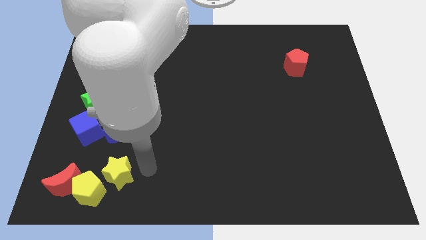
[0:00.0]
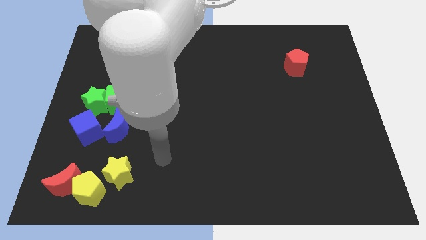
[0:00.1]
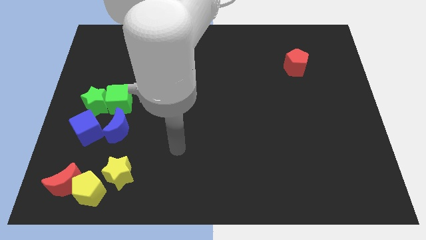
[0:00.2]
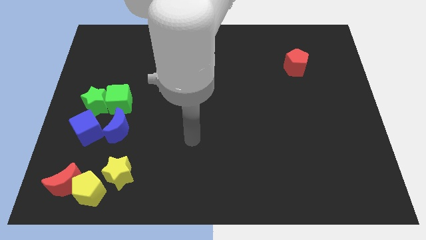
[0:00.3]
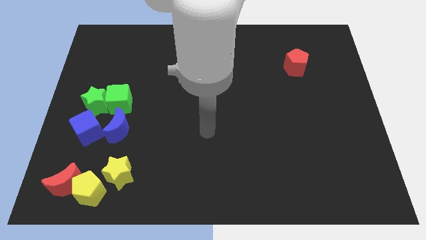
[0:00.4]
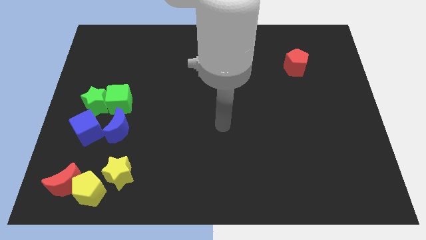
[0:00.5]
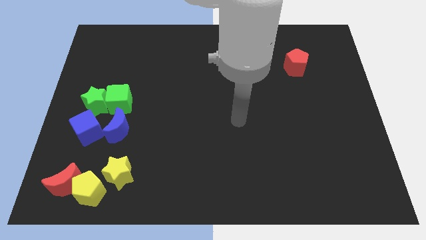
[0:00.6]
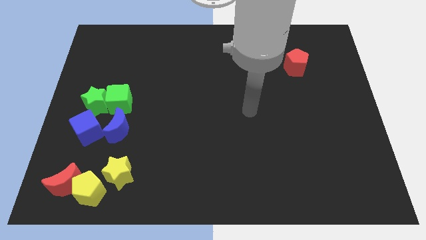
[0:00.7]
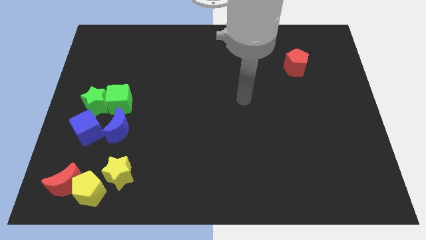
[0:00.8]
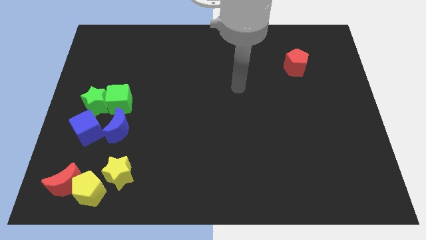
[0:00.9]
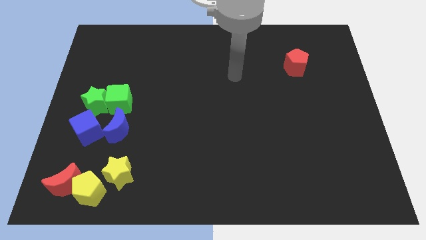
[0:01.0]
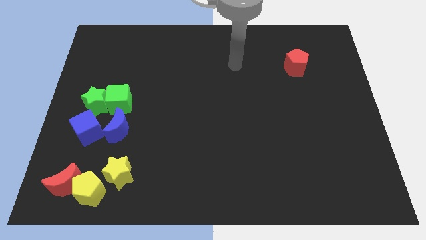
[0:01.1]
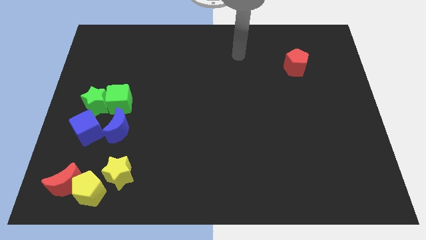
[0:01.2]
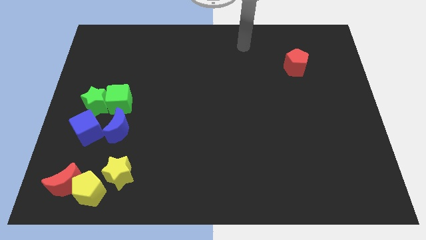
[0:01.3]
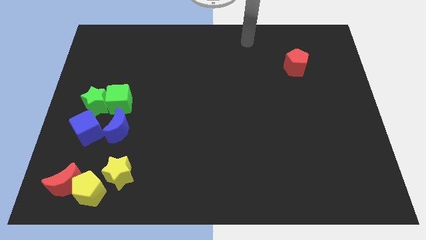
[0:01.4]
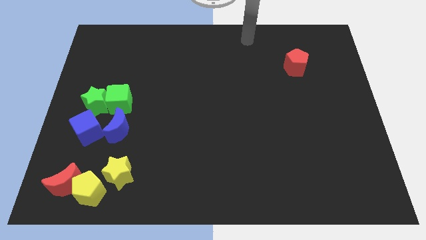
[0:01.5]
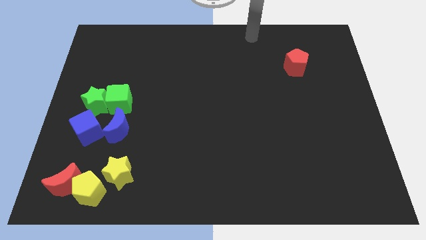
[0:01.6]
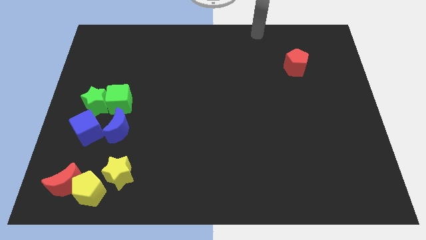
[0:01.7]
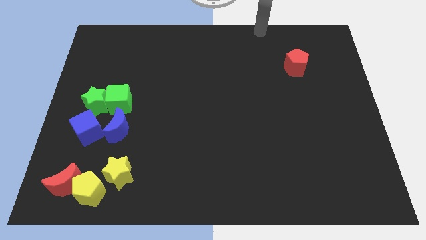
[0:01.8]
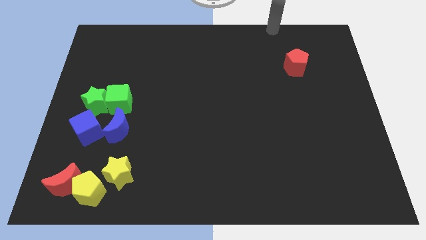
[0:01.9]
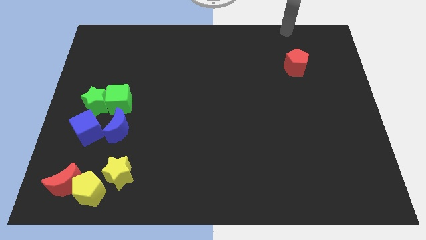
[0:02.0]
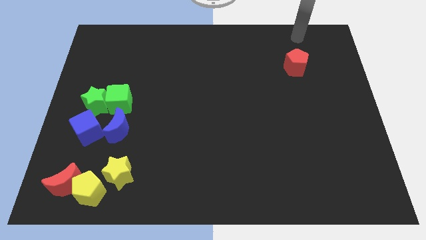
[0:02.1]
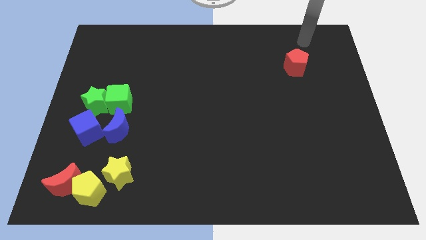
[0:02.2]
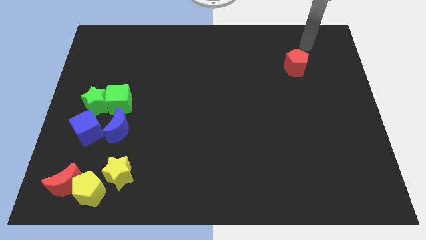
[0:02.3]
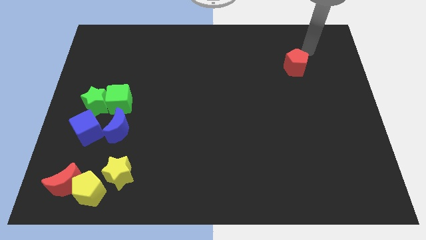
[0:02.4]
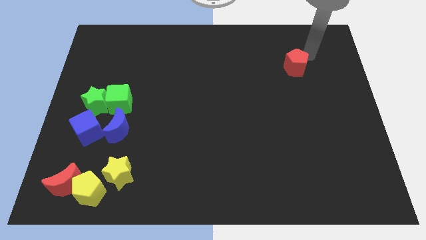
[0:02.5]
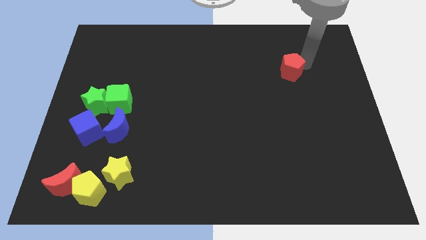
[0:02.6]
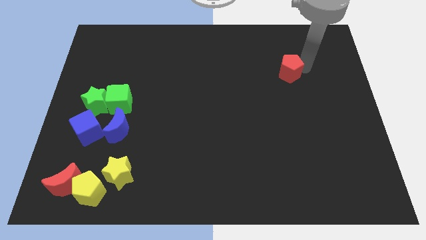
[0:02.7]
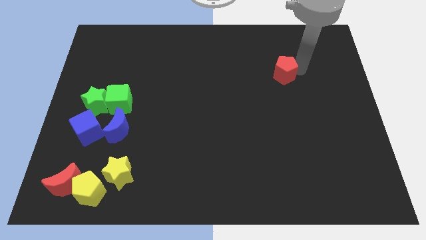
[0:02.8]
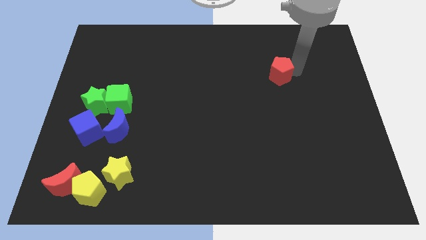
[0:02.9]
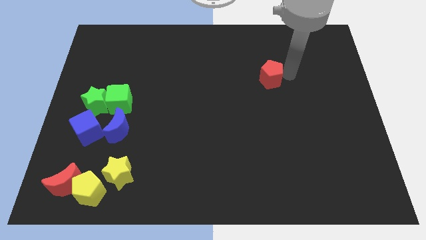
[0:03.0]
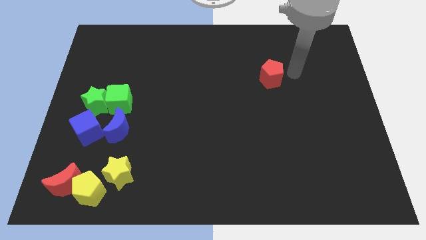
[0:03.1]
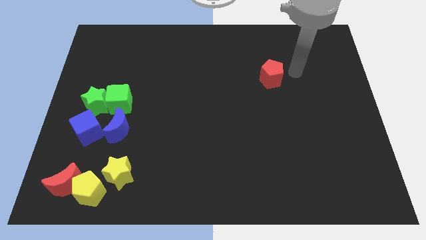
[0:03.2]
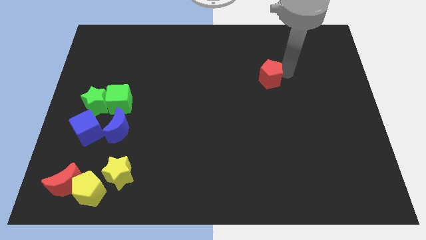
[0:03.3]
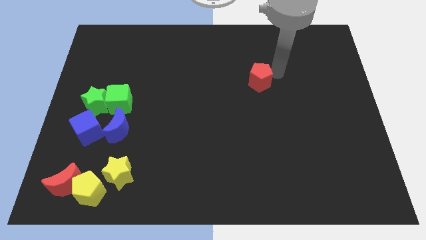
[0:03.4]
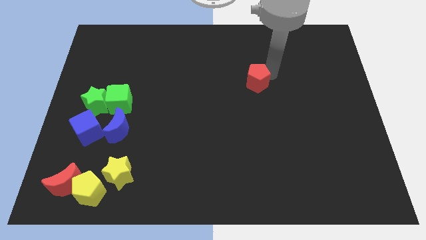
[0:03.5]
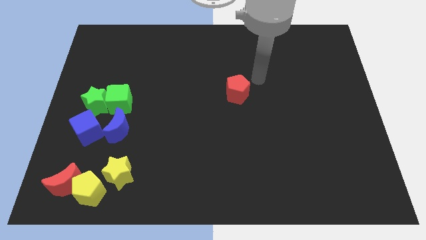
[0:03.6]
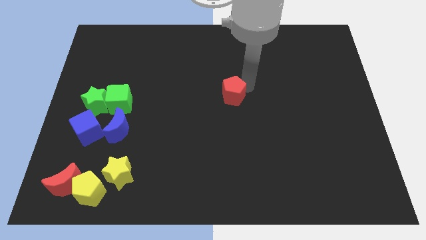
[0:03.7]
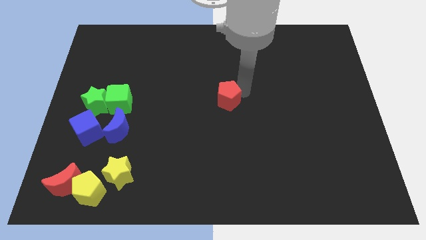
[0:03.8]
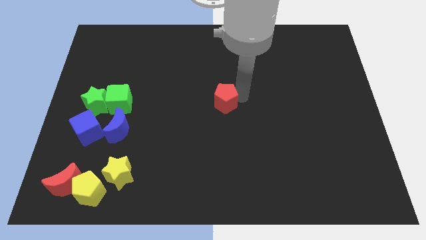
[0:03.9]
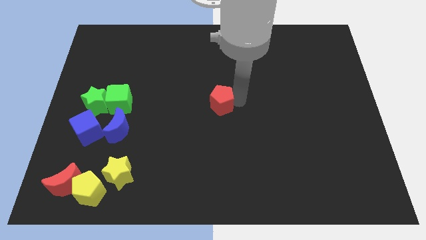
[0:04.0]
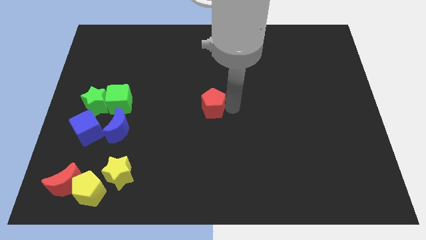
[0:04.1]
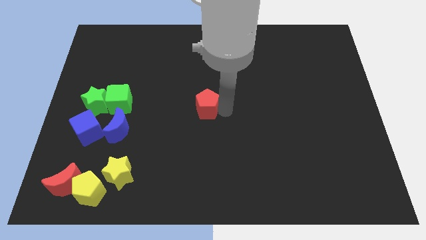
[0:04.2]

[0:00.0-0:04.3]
move the red pentagon to the center of the board

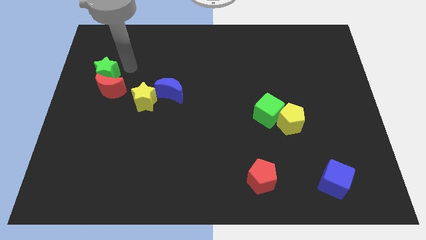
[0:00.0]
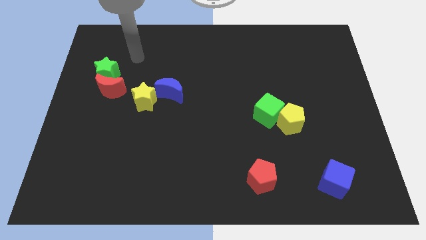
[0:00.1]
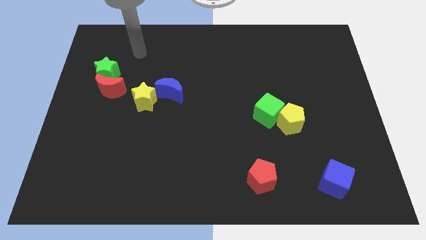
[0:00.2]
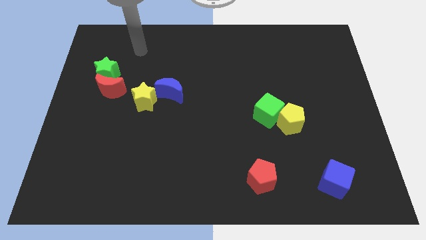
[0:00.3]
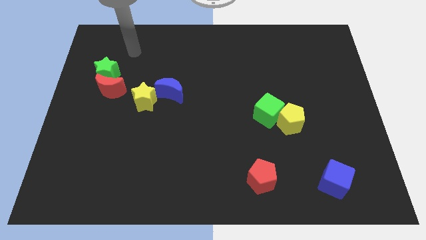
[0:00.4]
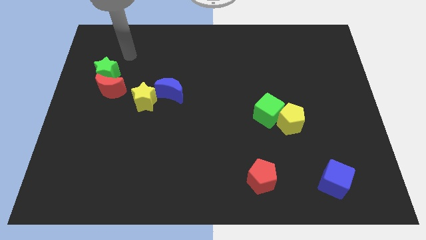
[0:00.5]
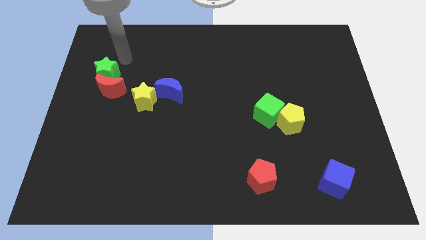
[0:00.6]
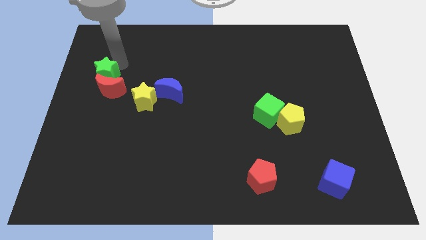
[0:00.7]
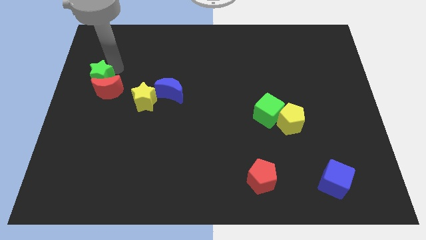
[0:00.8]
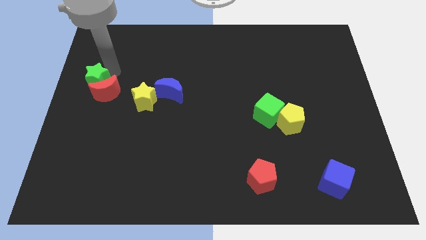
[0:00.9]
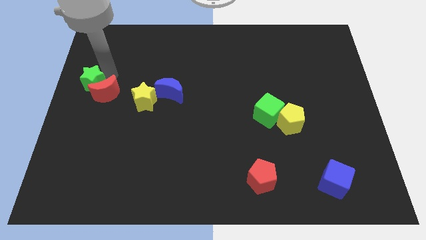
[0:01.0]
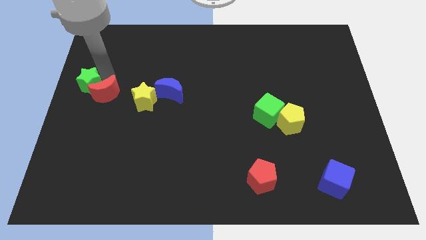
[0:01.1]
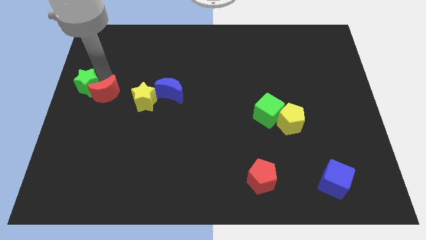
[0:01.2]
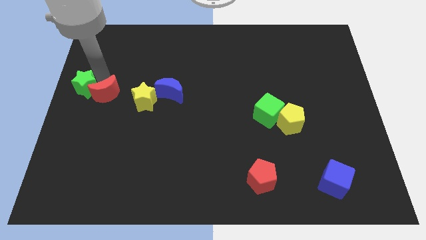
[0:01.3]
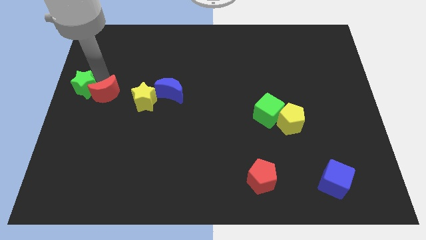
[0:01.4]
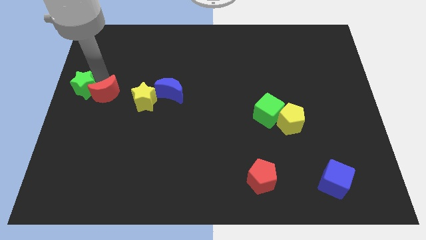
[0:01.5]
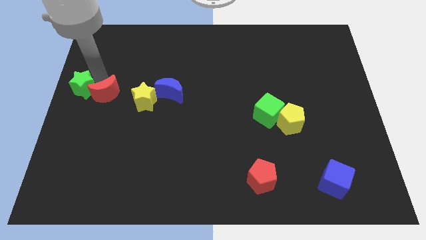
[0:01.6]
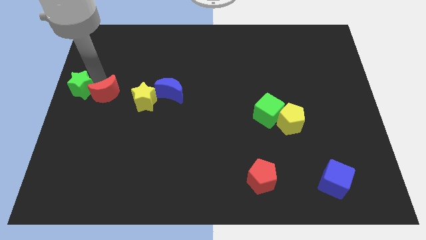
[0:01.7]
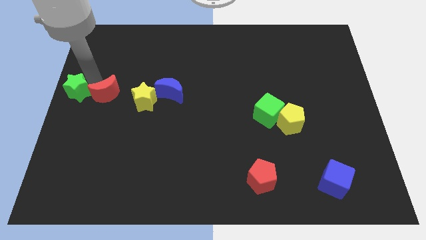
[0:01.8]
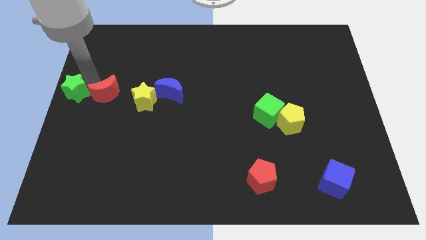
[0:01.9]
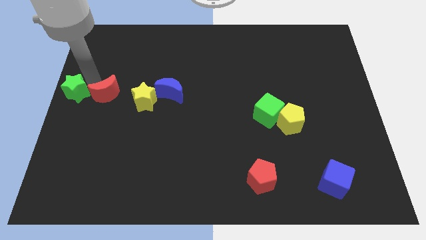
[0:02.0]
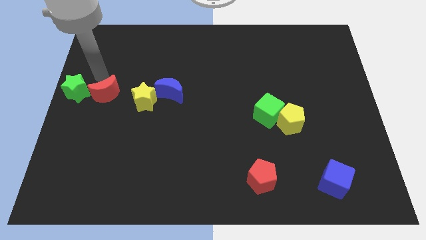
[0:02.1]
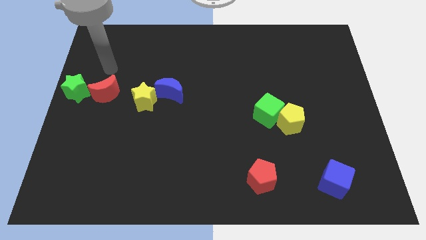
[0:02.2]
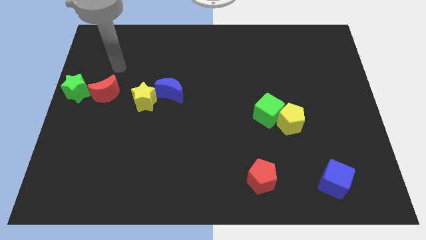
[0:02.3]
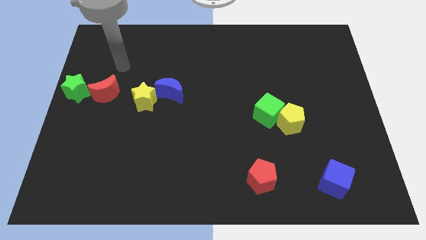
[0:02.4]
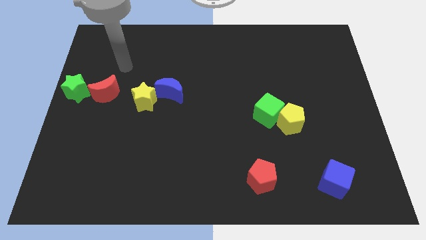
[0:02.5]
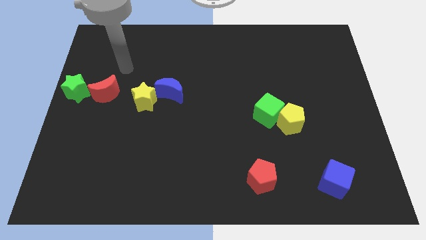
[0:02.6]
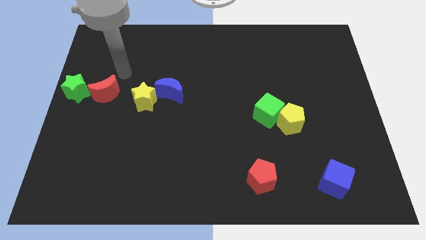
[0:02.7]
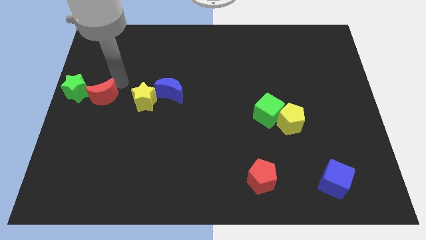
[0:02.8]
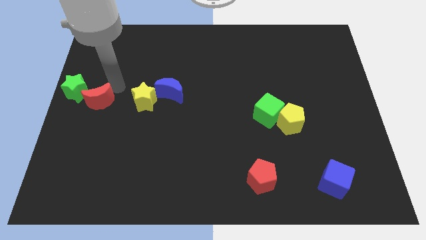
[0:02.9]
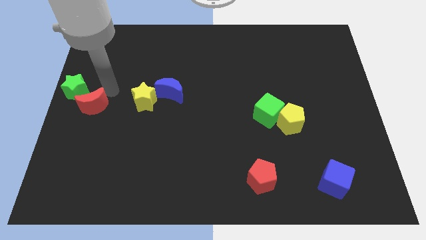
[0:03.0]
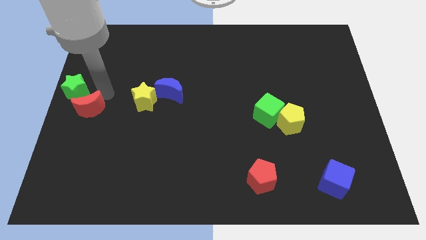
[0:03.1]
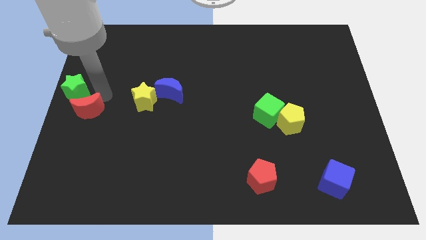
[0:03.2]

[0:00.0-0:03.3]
separate green star red moon from yellow star

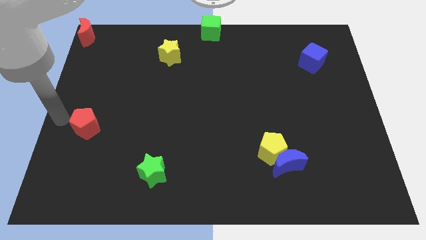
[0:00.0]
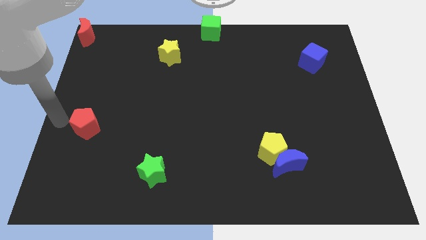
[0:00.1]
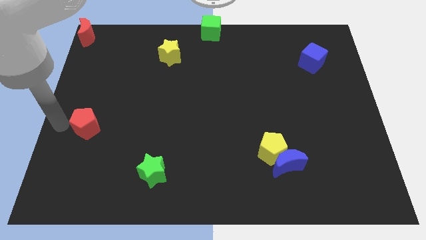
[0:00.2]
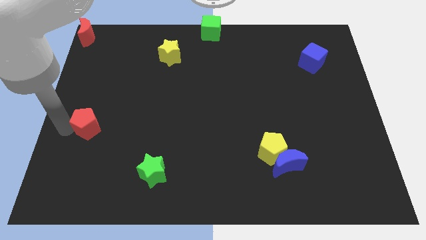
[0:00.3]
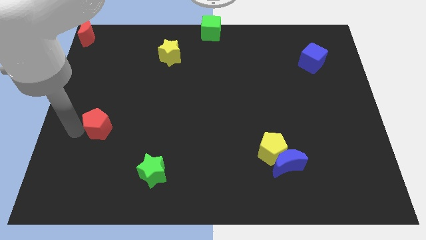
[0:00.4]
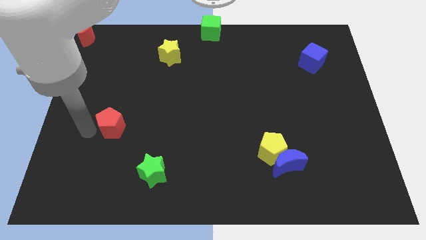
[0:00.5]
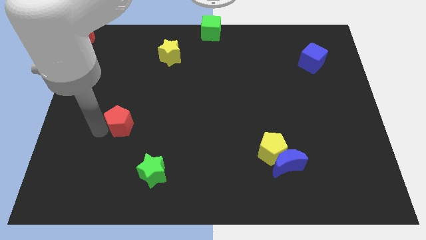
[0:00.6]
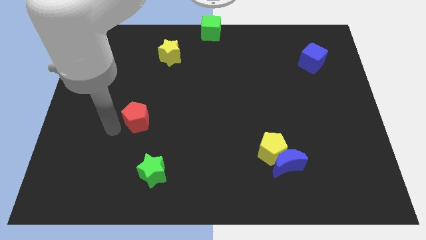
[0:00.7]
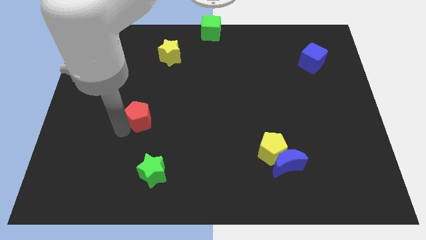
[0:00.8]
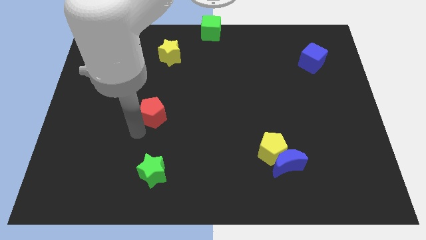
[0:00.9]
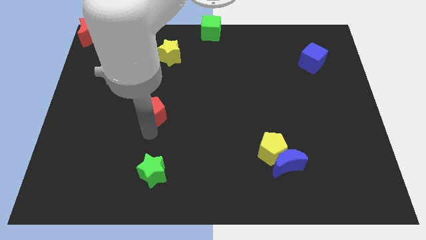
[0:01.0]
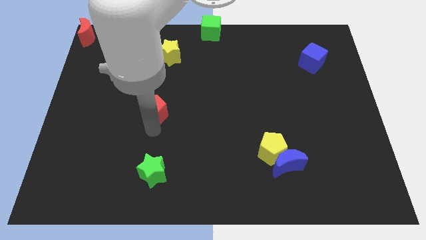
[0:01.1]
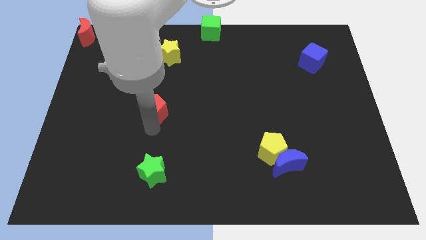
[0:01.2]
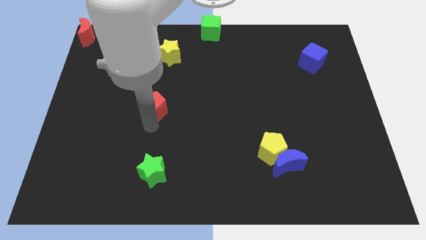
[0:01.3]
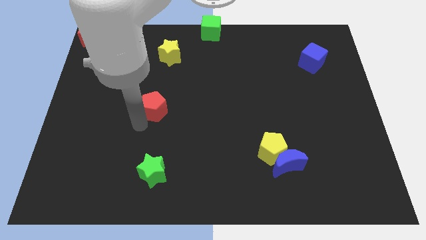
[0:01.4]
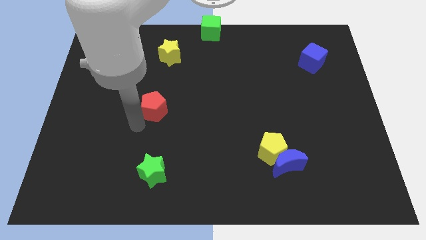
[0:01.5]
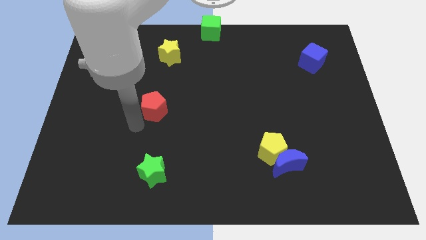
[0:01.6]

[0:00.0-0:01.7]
place red pentagon above green star
